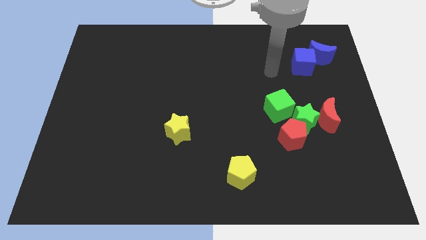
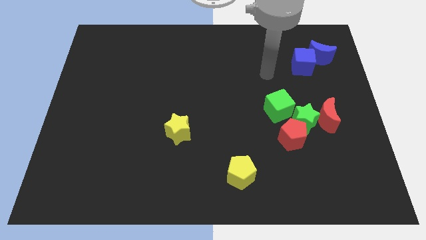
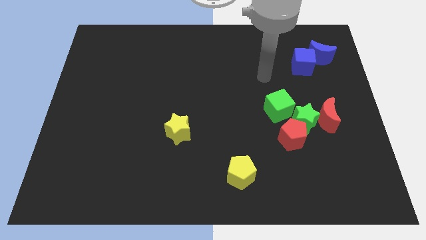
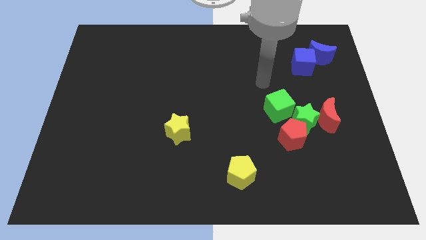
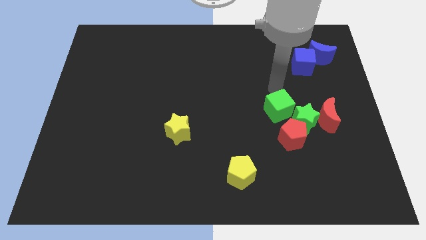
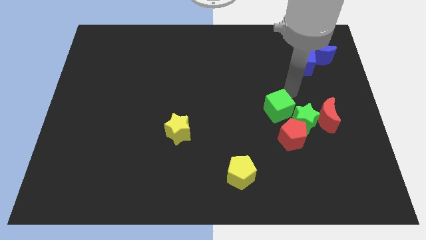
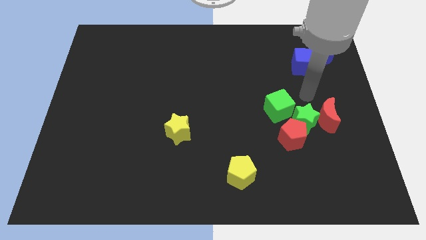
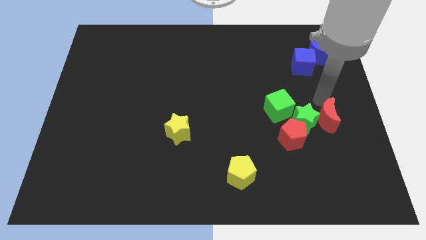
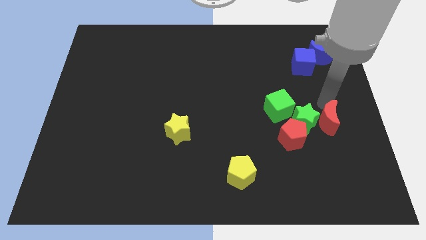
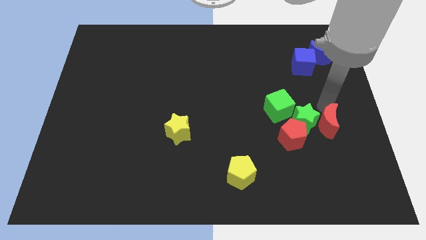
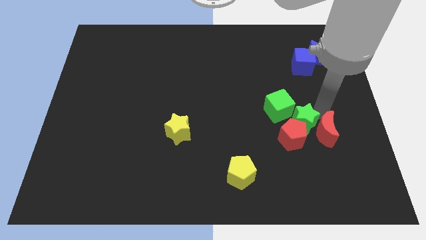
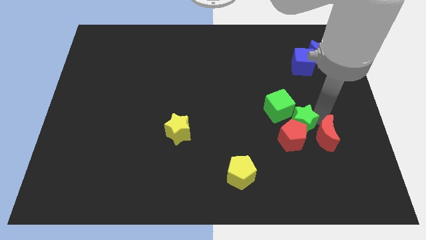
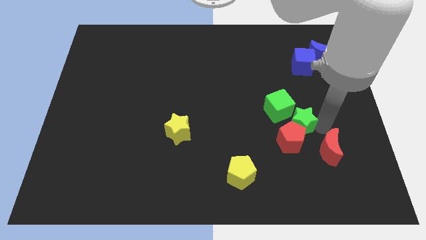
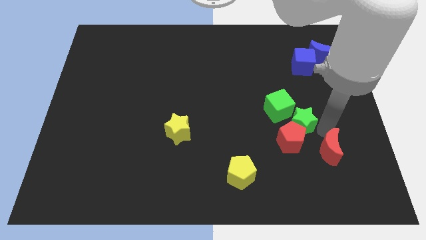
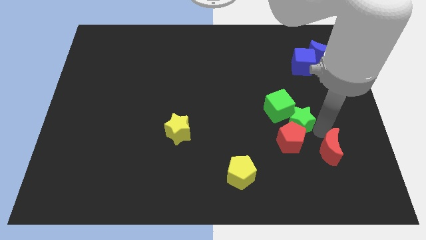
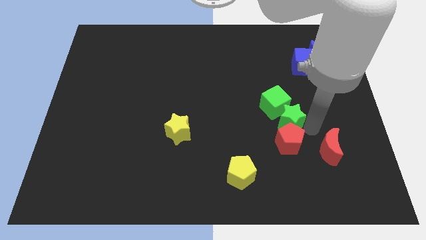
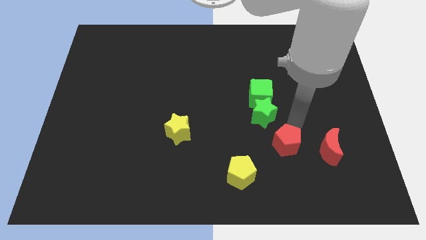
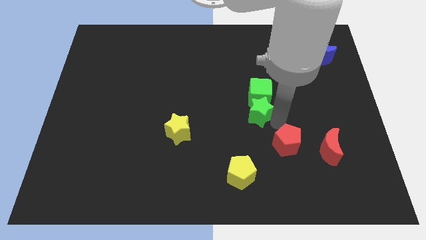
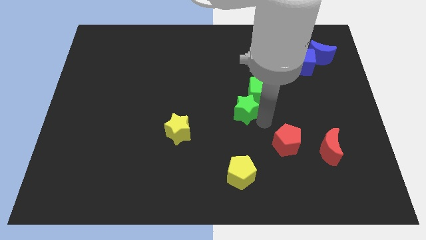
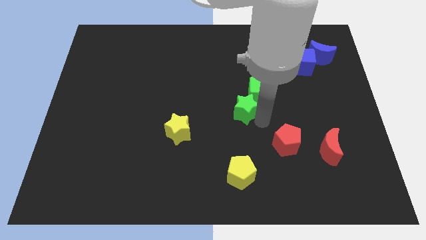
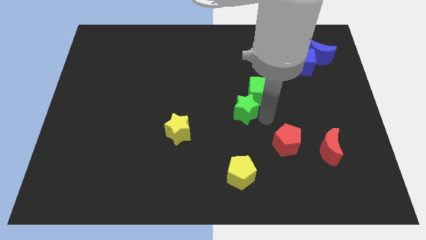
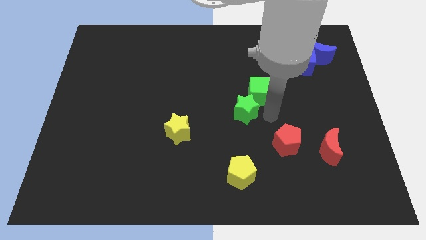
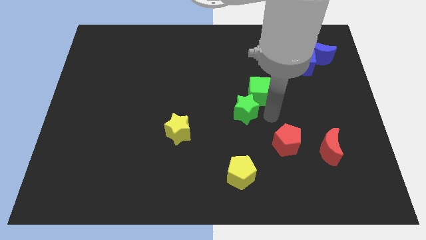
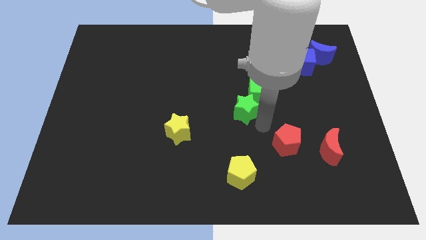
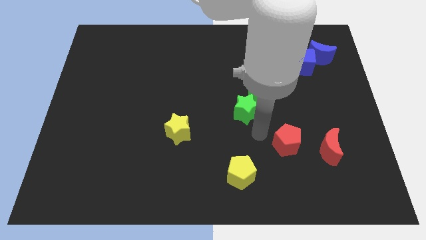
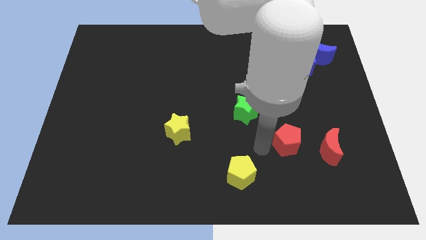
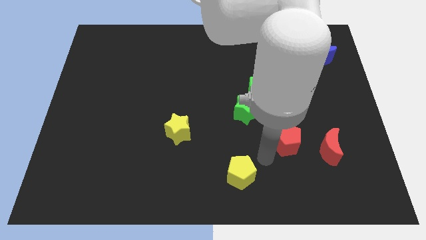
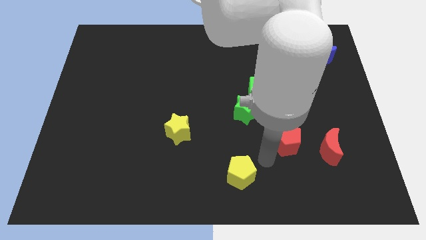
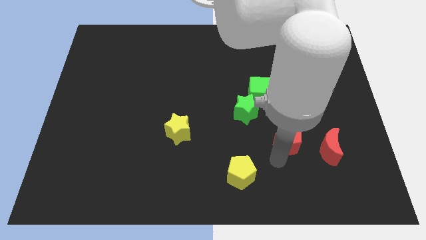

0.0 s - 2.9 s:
push the group of green blocks to the left

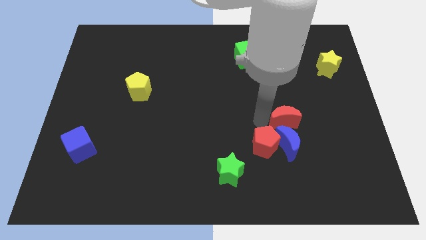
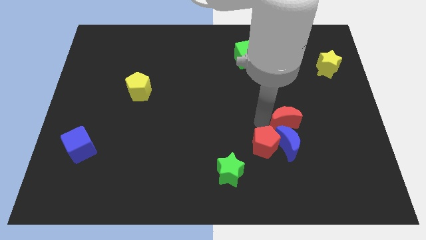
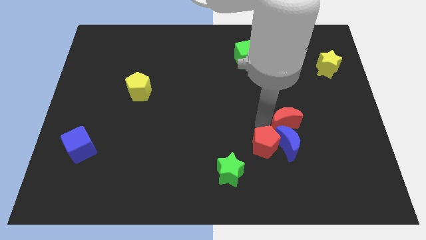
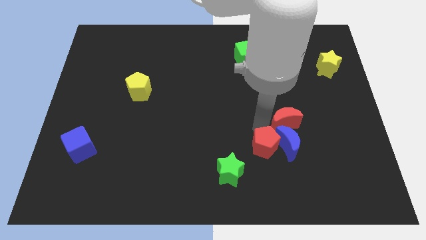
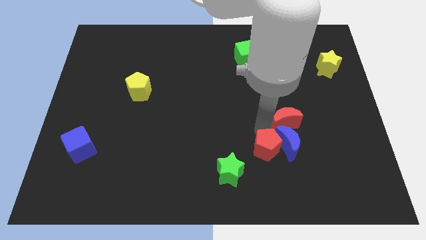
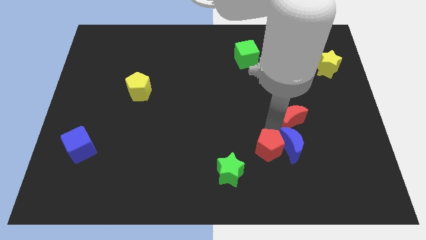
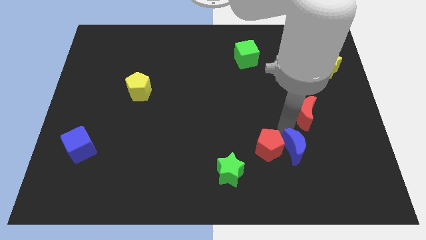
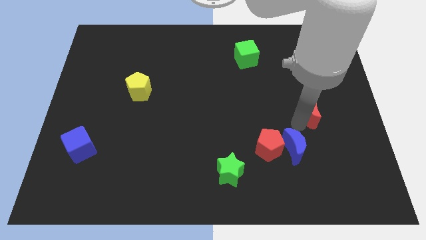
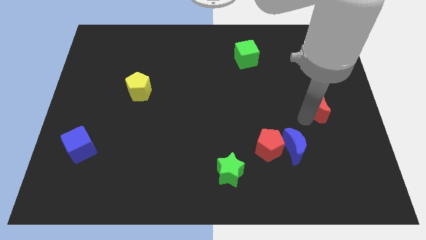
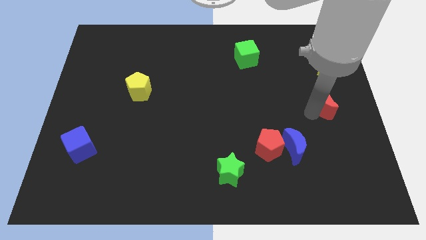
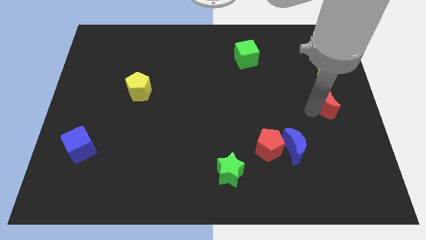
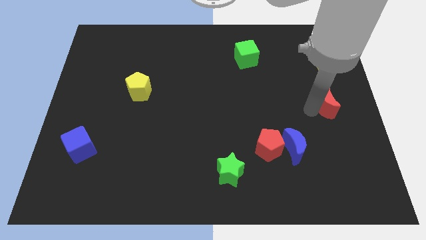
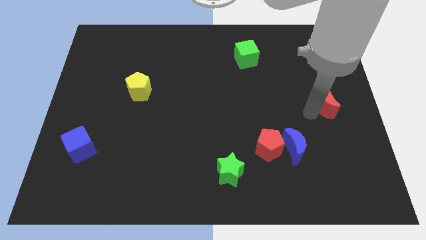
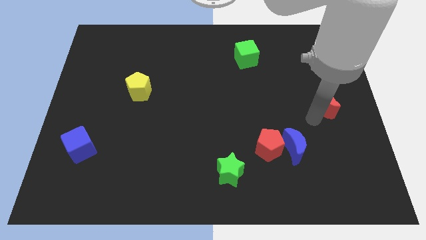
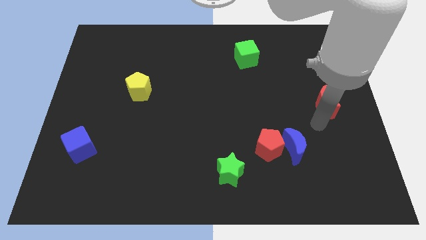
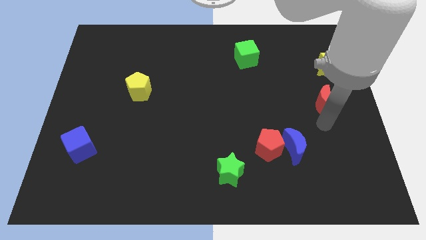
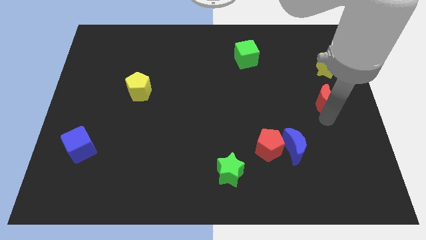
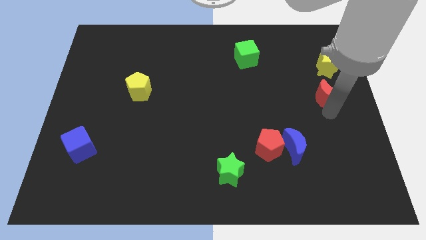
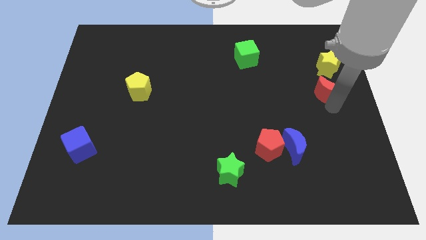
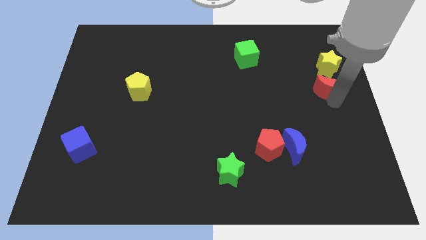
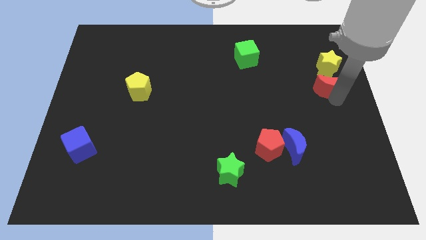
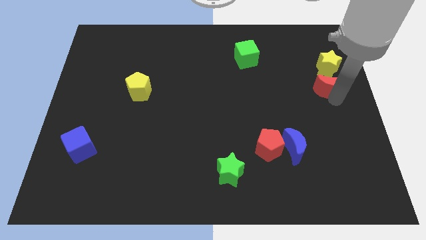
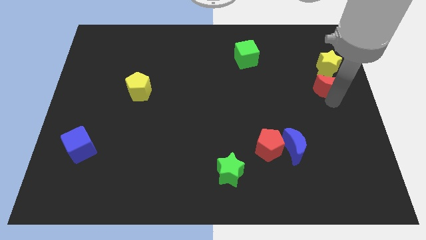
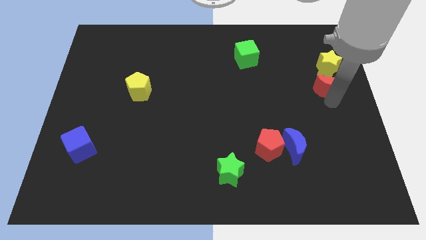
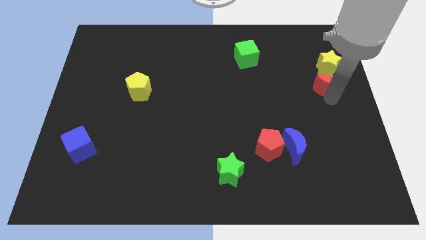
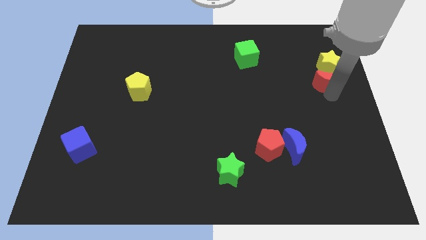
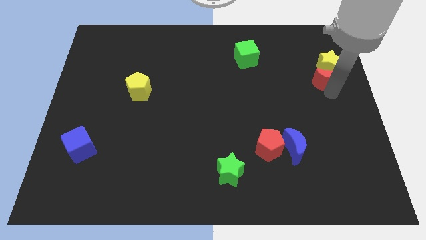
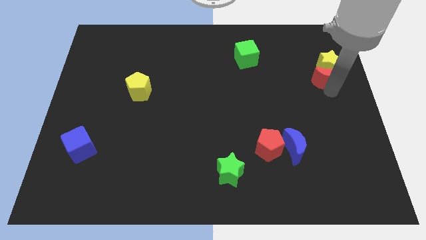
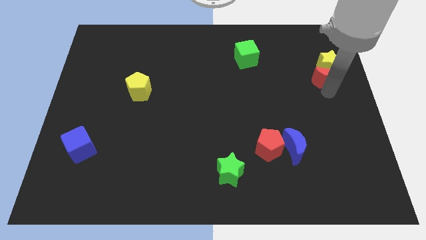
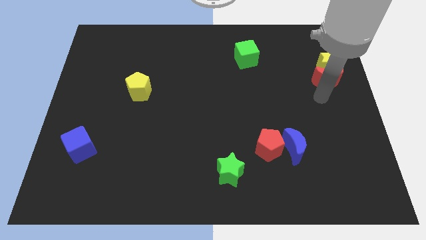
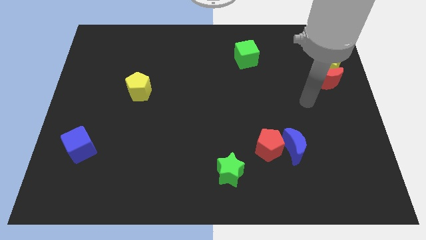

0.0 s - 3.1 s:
move the red crescent below to the yellow star

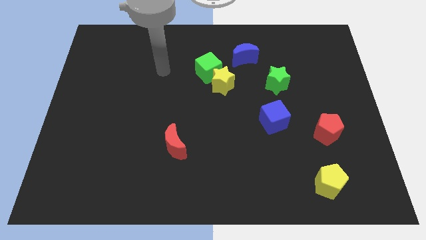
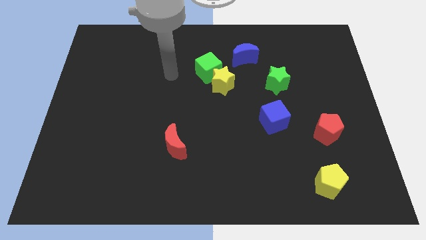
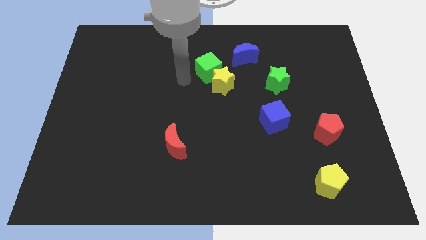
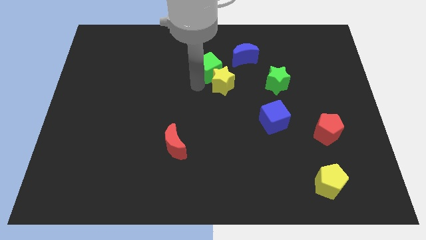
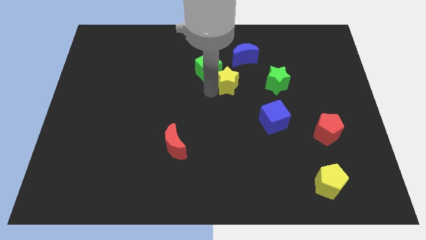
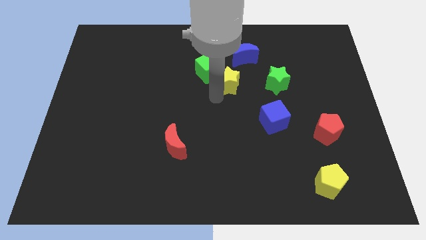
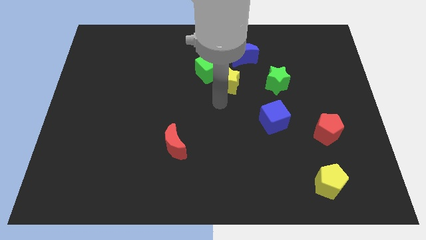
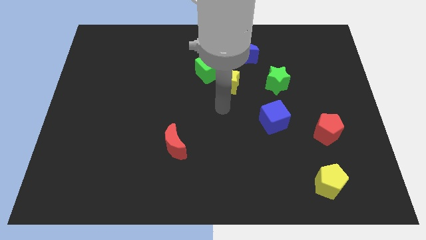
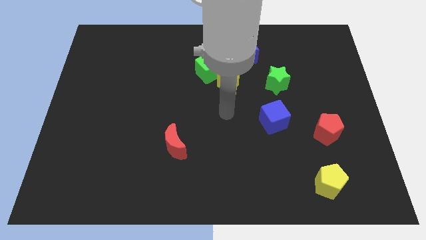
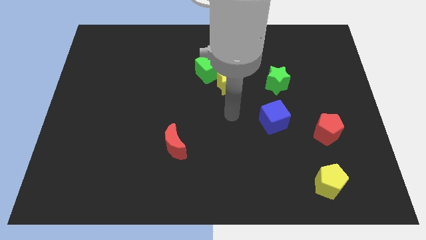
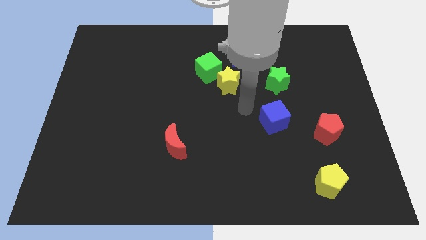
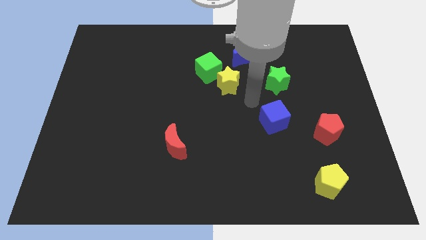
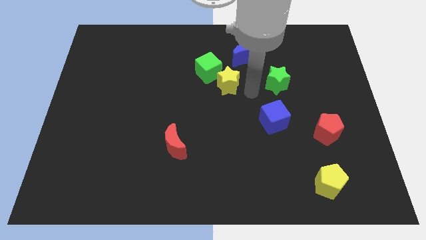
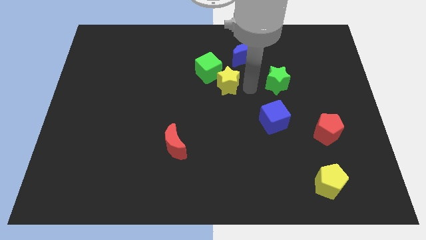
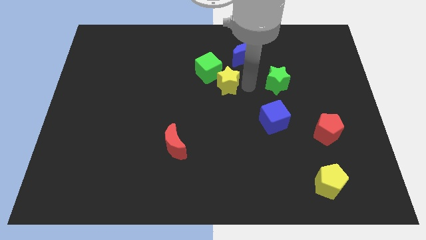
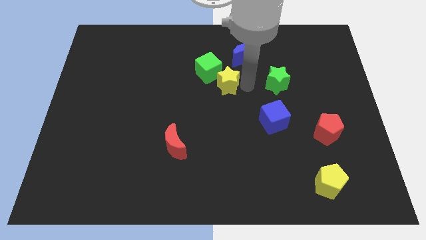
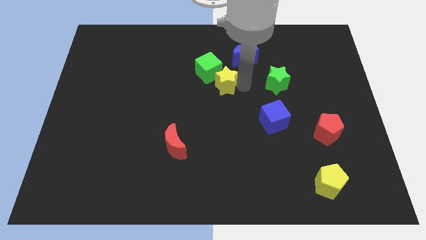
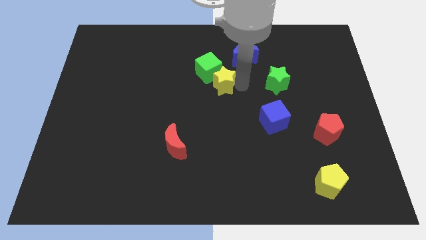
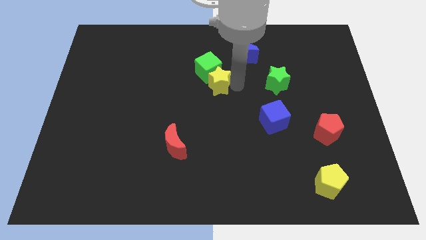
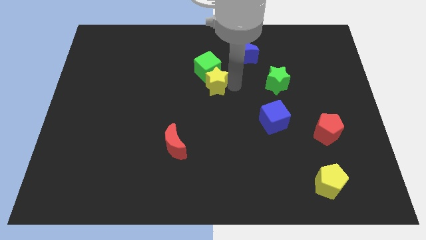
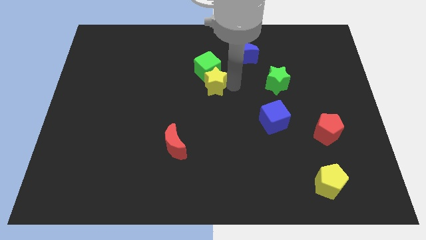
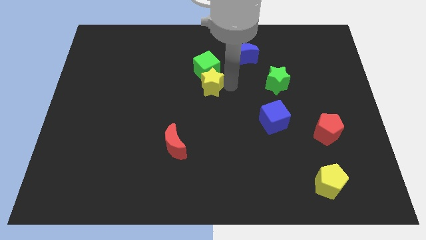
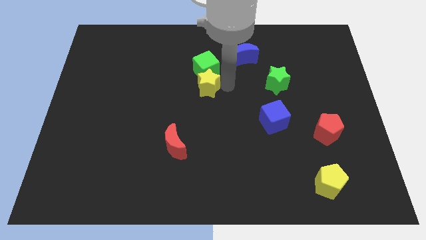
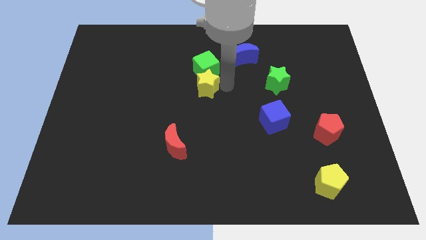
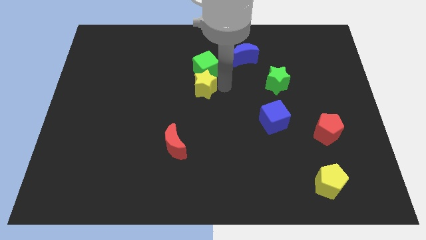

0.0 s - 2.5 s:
push the yellow star slightly to the left

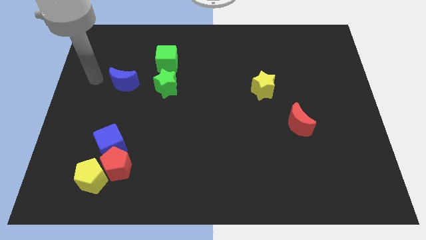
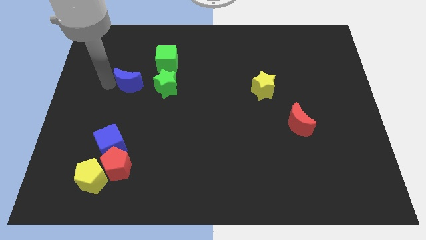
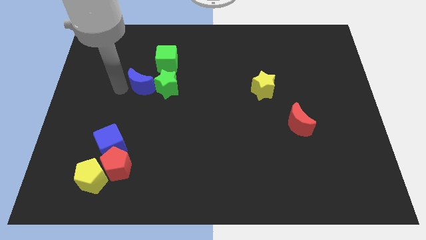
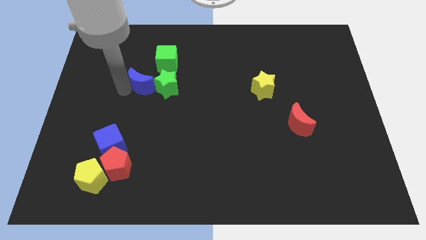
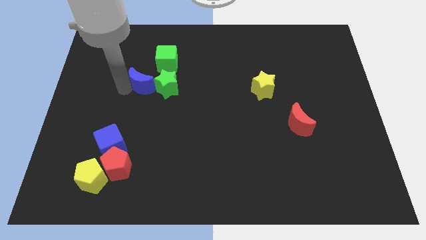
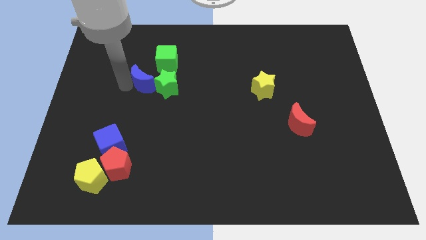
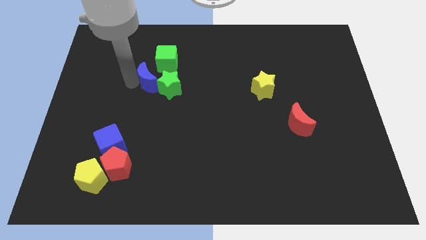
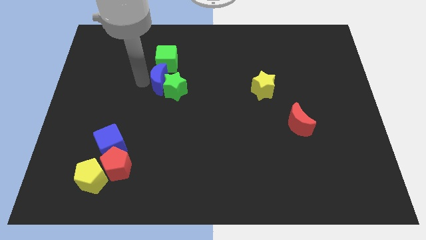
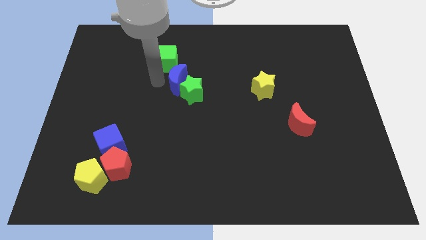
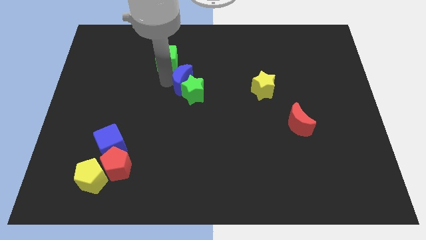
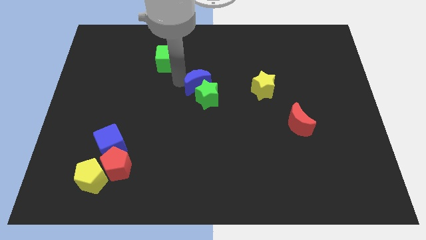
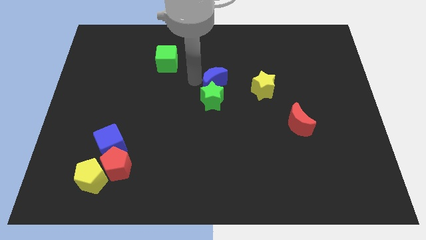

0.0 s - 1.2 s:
place blue crescent above green star
